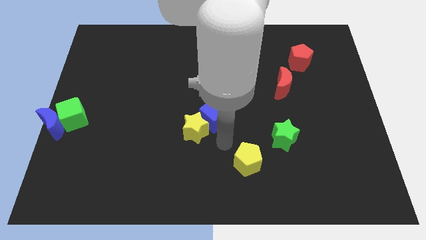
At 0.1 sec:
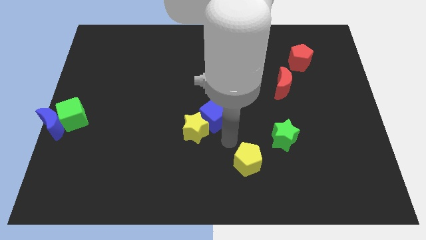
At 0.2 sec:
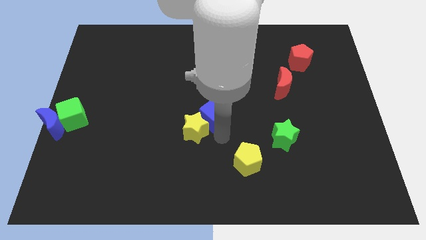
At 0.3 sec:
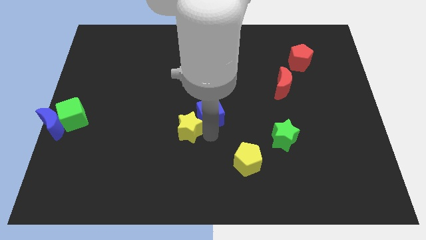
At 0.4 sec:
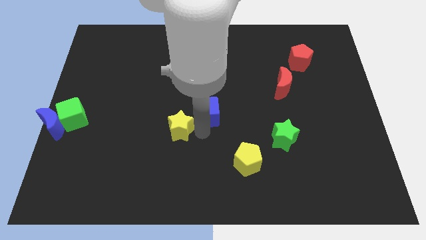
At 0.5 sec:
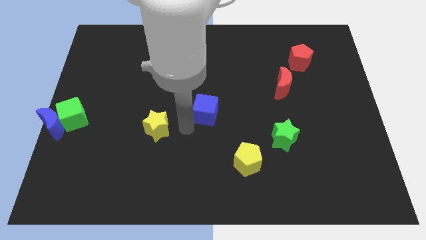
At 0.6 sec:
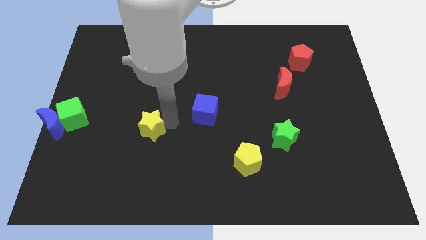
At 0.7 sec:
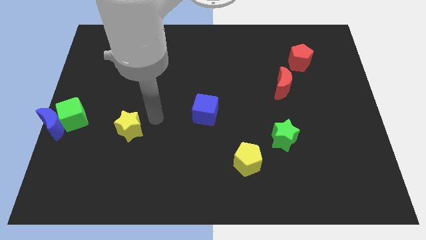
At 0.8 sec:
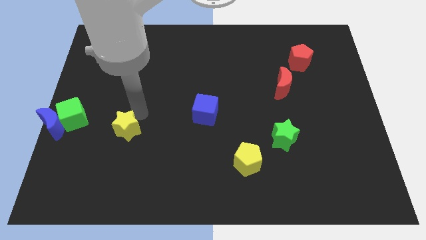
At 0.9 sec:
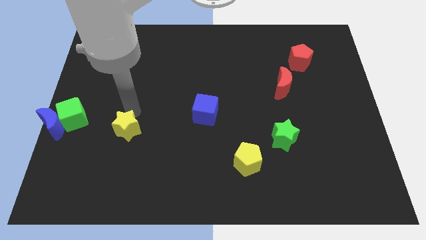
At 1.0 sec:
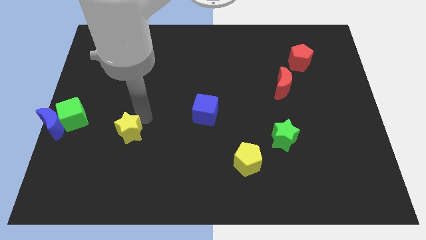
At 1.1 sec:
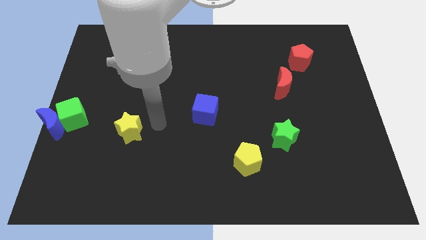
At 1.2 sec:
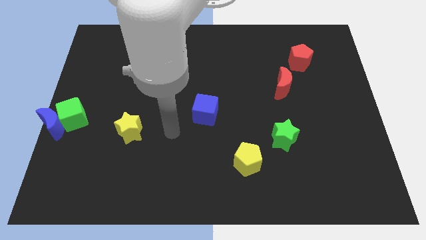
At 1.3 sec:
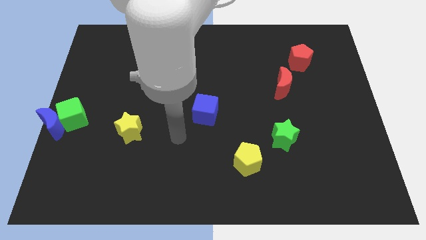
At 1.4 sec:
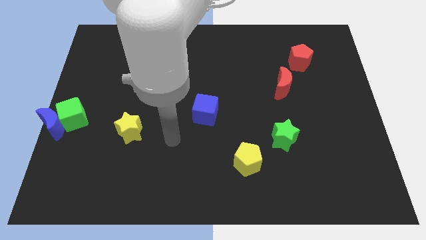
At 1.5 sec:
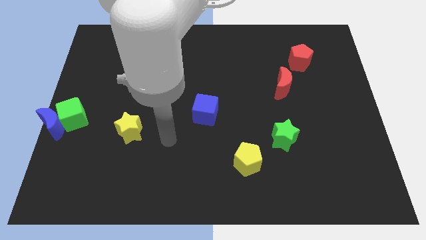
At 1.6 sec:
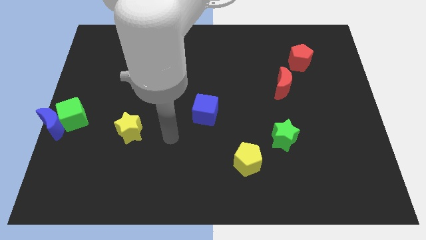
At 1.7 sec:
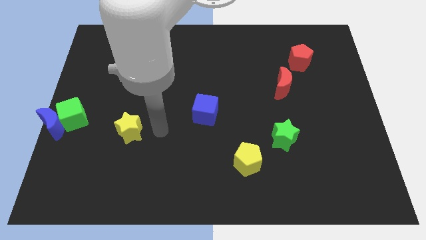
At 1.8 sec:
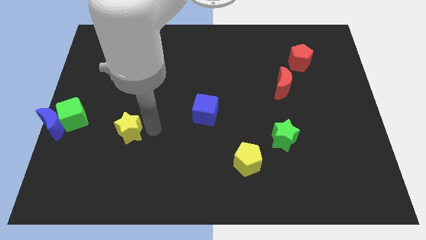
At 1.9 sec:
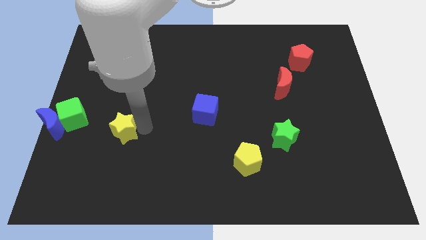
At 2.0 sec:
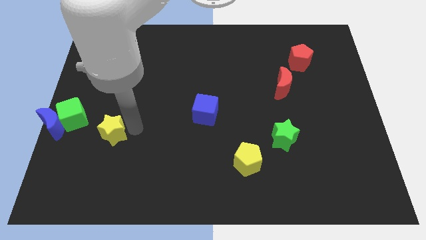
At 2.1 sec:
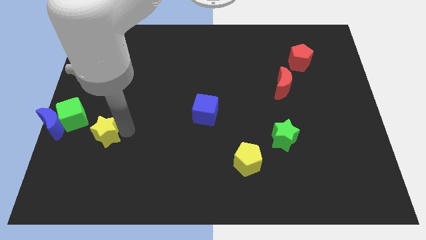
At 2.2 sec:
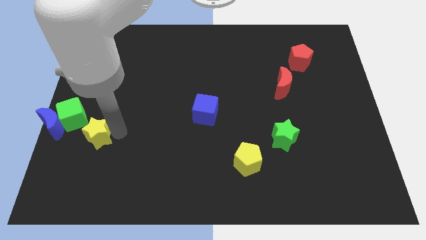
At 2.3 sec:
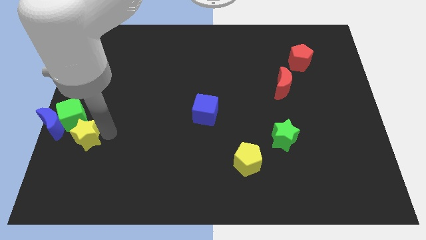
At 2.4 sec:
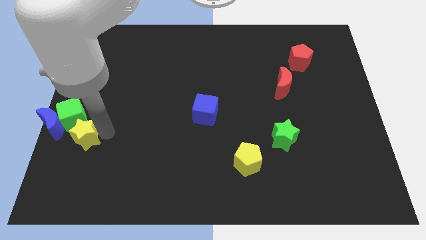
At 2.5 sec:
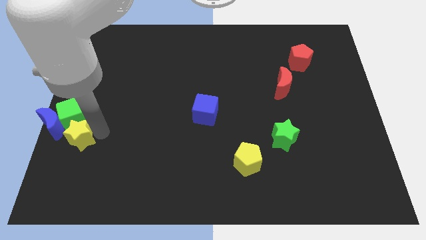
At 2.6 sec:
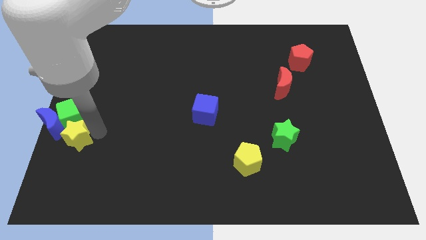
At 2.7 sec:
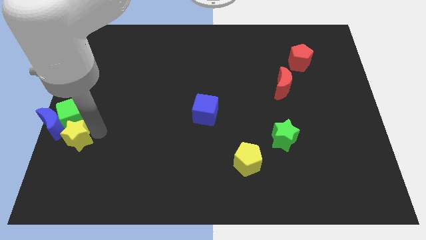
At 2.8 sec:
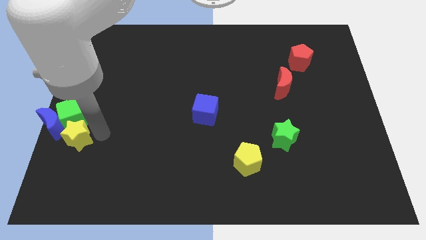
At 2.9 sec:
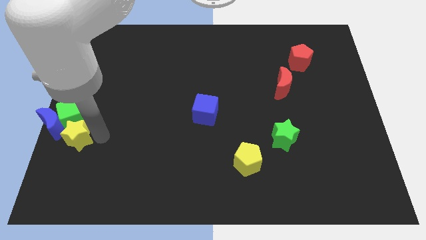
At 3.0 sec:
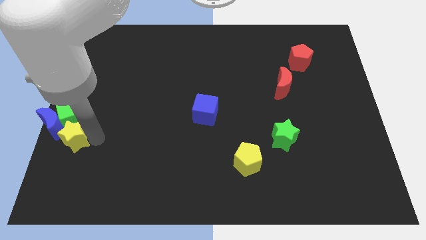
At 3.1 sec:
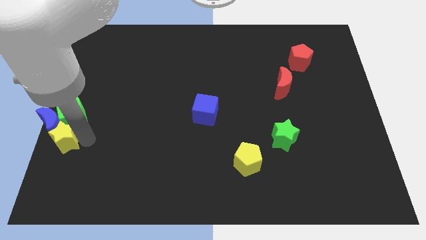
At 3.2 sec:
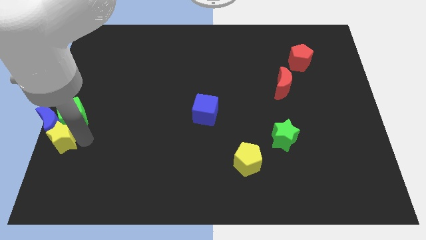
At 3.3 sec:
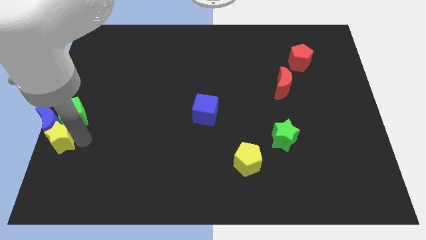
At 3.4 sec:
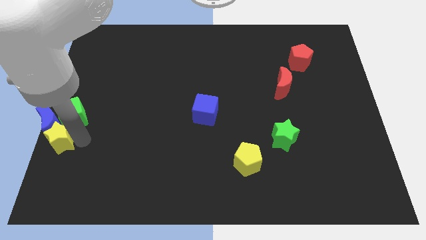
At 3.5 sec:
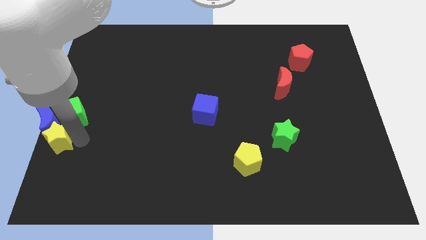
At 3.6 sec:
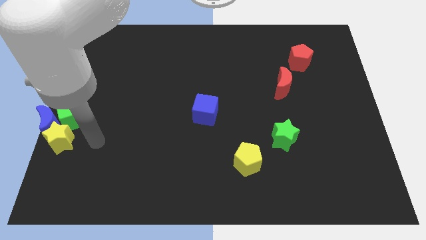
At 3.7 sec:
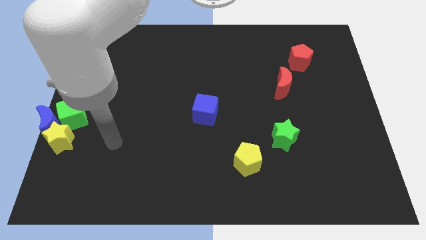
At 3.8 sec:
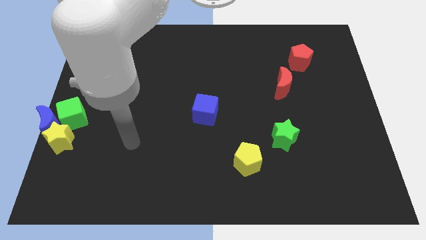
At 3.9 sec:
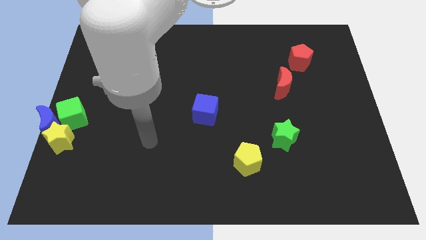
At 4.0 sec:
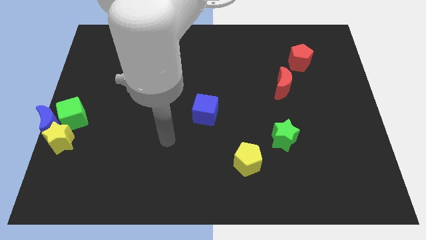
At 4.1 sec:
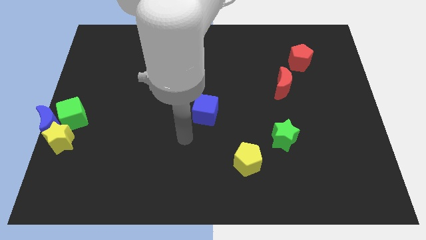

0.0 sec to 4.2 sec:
separate the yellow star from the blue cube

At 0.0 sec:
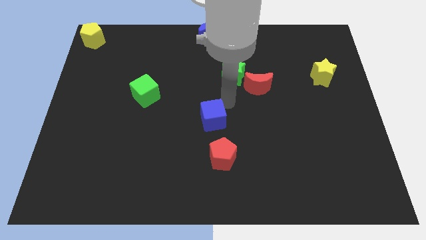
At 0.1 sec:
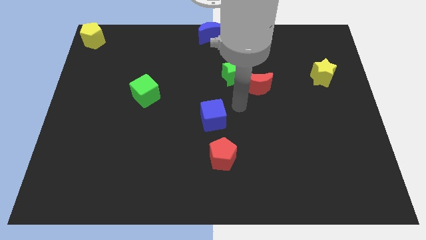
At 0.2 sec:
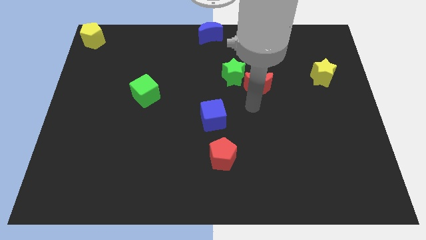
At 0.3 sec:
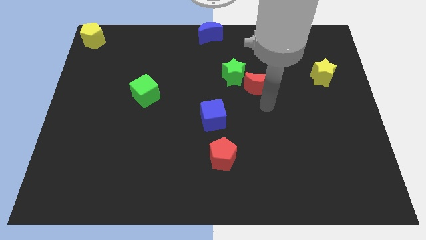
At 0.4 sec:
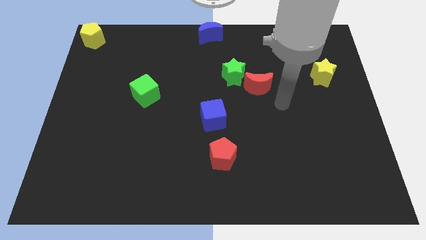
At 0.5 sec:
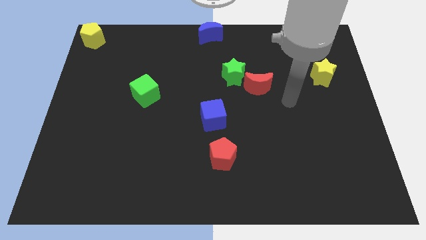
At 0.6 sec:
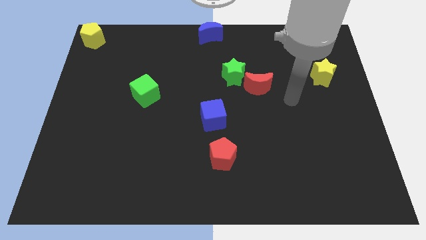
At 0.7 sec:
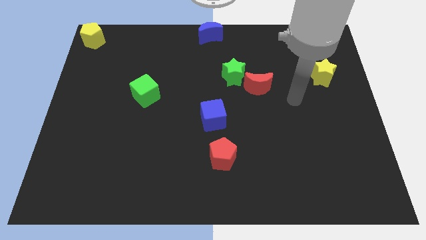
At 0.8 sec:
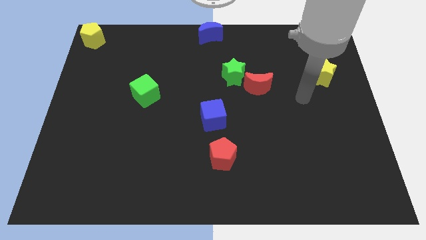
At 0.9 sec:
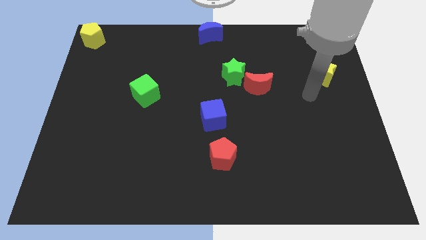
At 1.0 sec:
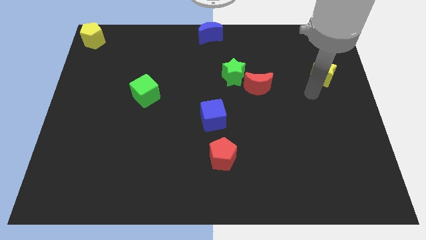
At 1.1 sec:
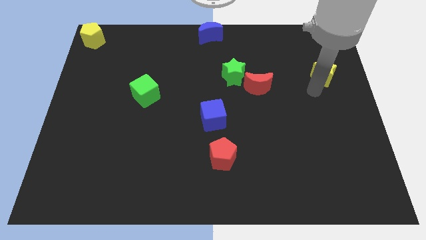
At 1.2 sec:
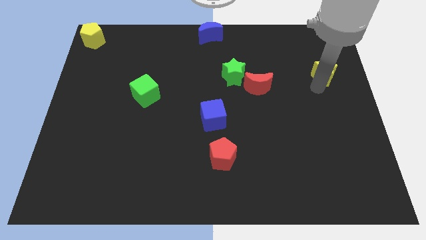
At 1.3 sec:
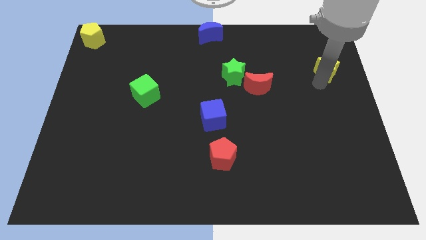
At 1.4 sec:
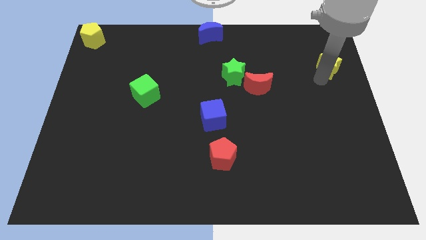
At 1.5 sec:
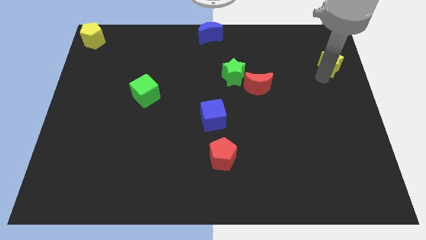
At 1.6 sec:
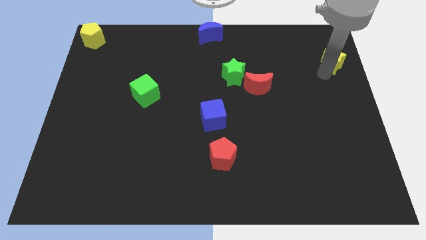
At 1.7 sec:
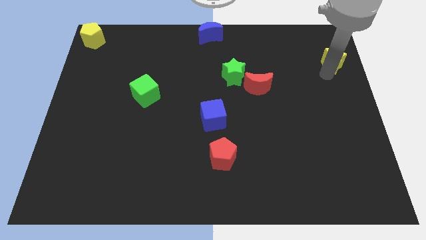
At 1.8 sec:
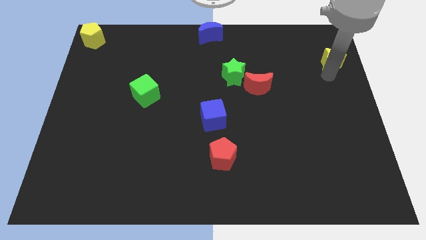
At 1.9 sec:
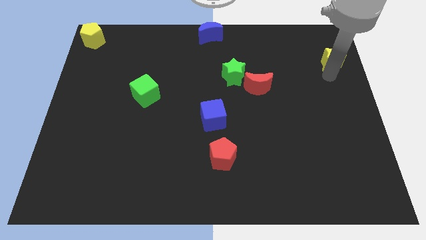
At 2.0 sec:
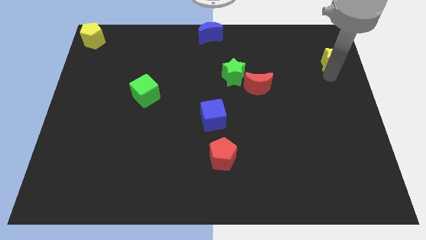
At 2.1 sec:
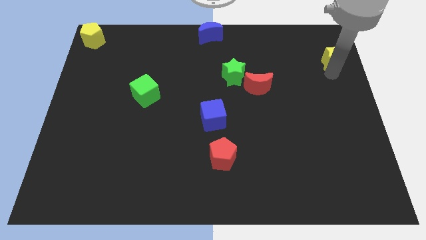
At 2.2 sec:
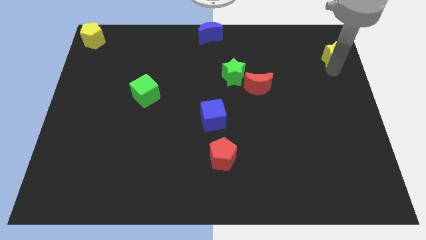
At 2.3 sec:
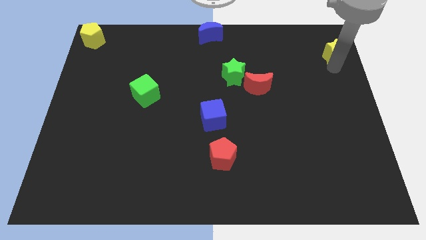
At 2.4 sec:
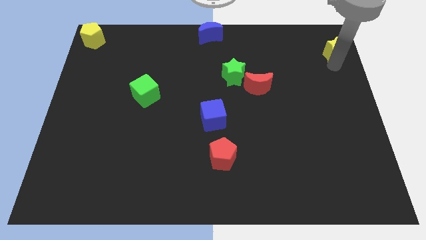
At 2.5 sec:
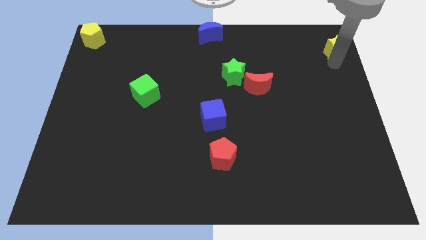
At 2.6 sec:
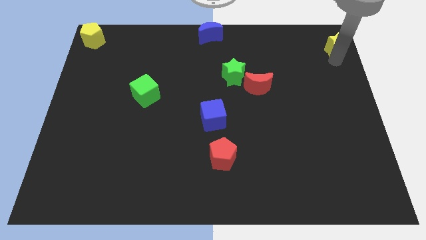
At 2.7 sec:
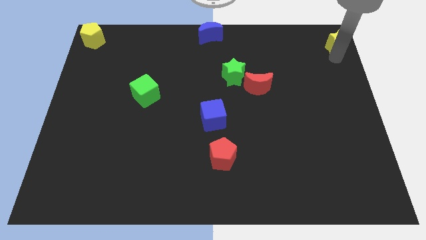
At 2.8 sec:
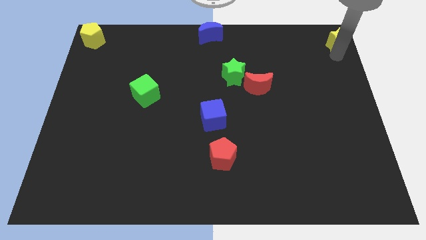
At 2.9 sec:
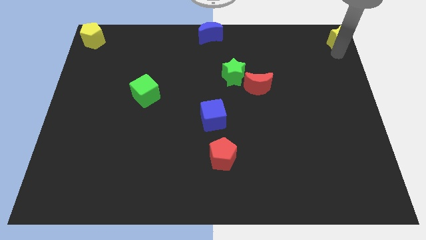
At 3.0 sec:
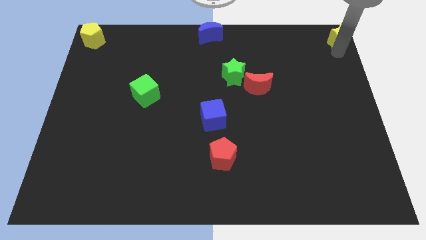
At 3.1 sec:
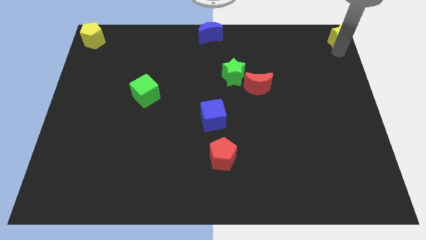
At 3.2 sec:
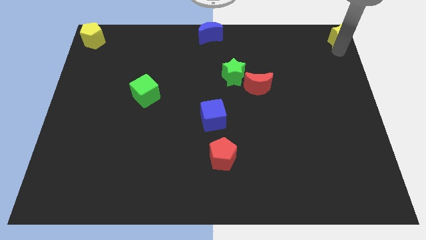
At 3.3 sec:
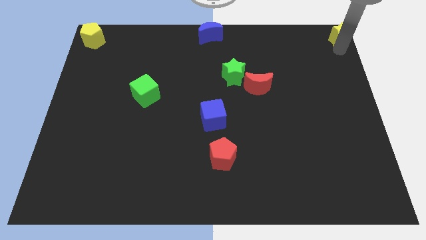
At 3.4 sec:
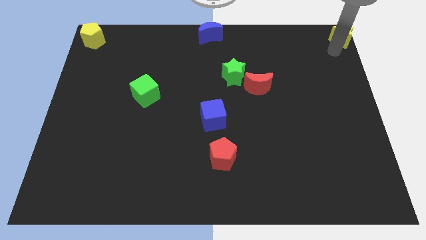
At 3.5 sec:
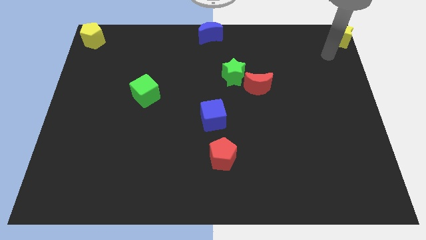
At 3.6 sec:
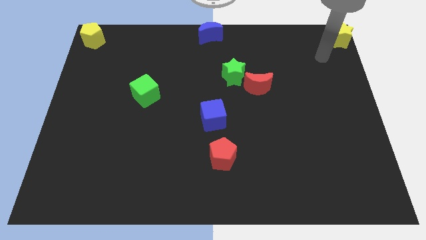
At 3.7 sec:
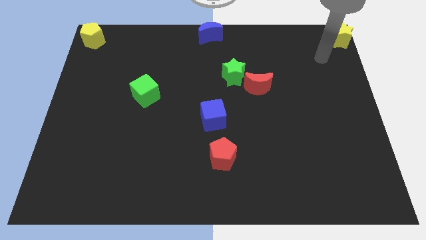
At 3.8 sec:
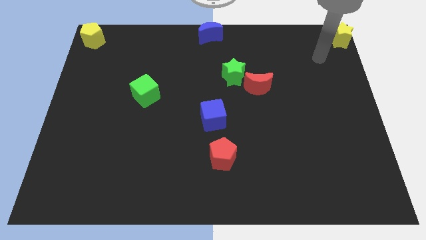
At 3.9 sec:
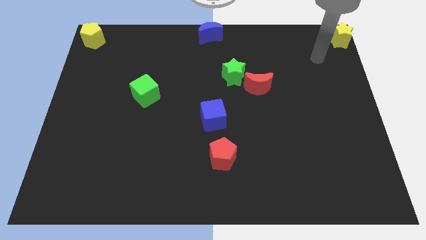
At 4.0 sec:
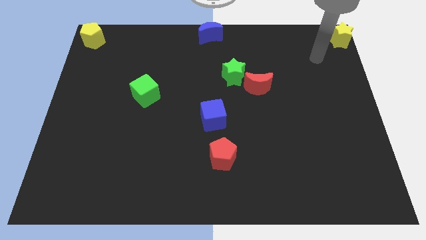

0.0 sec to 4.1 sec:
push the yellow star to the top right of the board

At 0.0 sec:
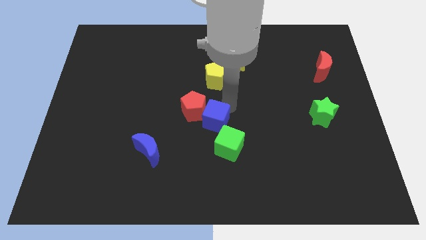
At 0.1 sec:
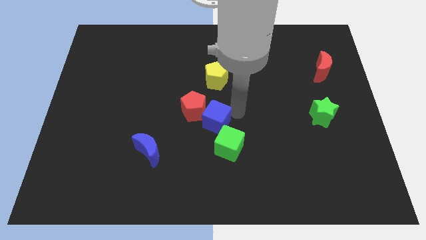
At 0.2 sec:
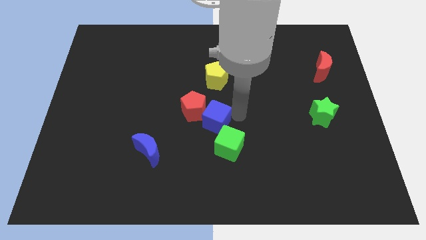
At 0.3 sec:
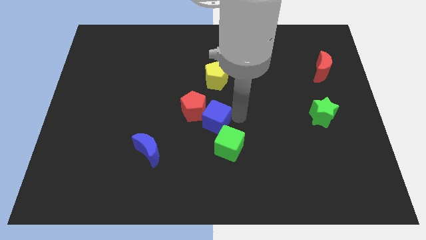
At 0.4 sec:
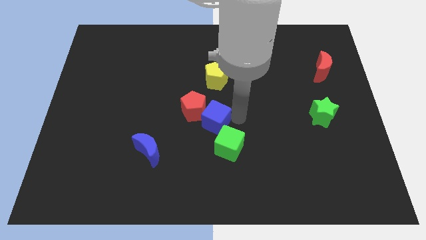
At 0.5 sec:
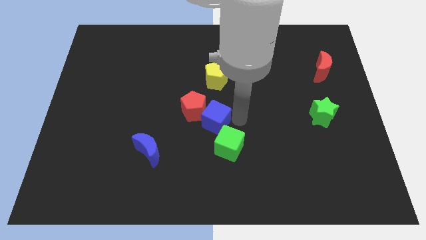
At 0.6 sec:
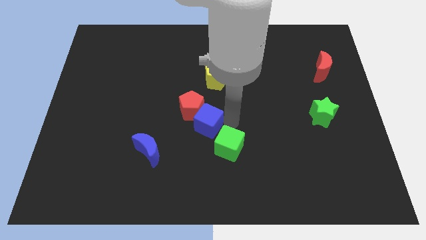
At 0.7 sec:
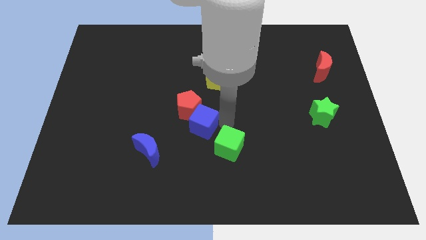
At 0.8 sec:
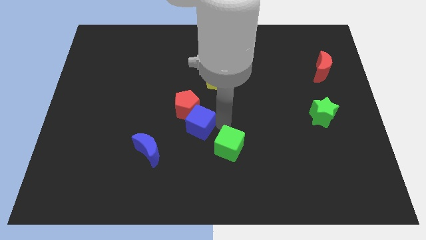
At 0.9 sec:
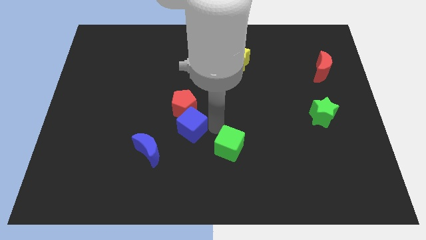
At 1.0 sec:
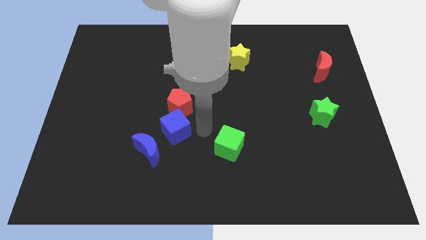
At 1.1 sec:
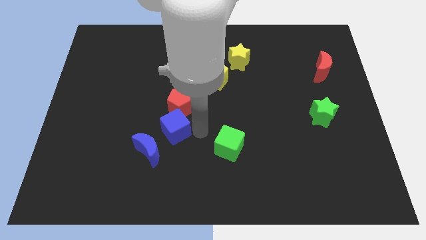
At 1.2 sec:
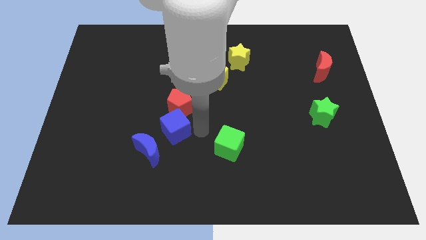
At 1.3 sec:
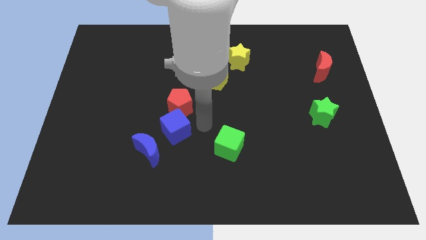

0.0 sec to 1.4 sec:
move blue cube to the bottom of the red pentagon
